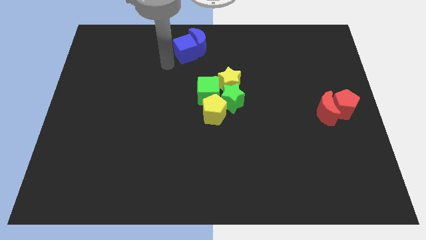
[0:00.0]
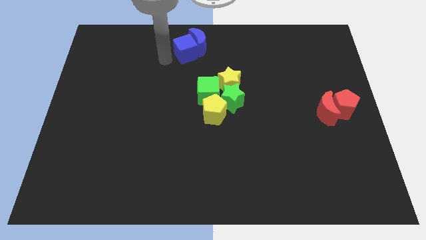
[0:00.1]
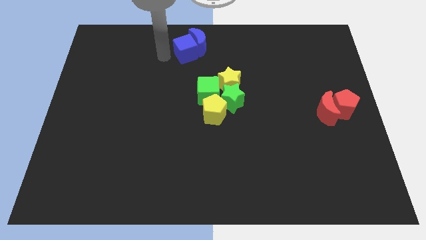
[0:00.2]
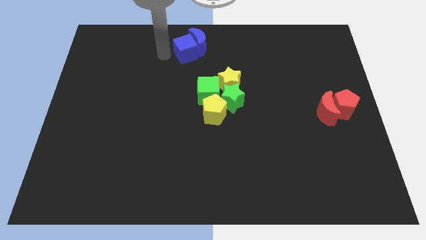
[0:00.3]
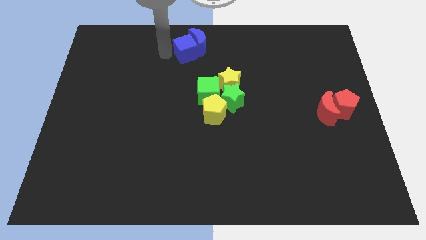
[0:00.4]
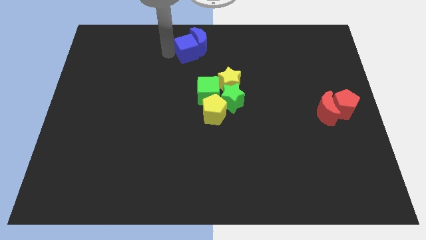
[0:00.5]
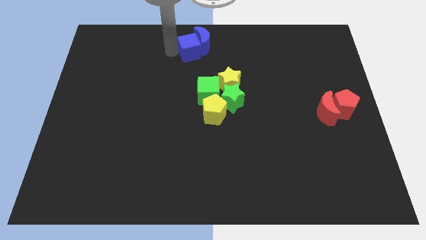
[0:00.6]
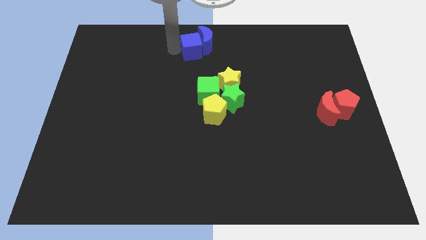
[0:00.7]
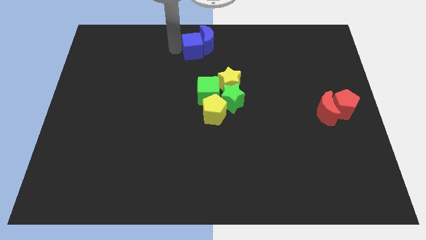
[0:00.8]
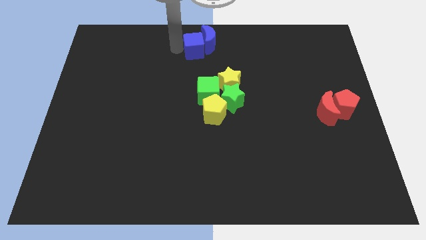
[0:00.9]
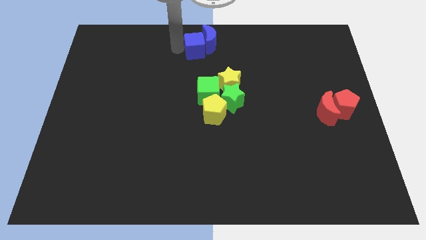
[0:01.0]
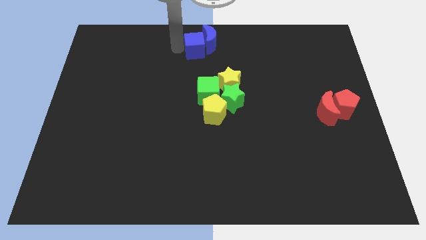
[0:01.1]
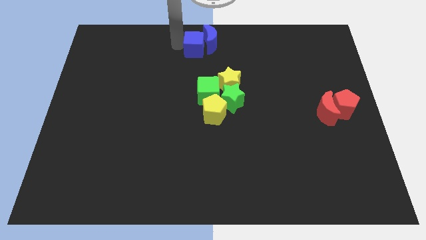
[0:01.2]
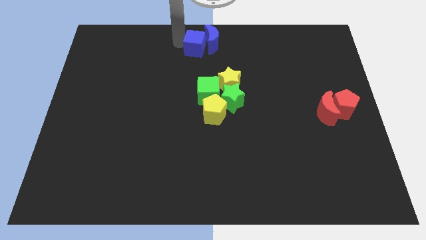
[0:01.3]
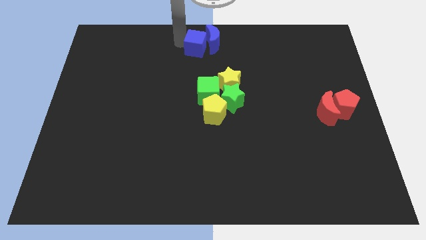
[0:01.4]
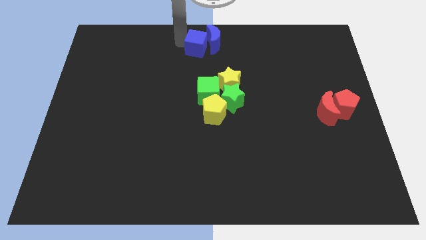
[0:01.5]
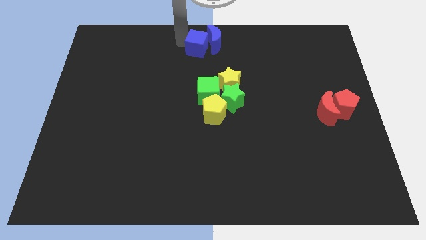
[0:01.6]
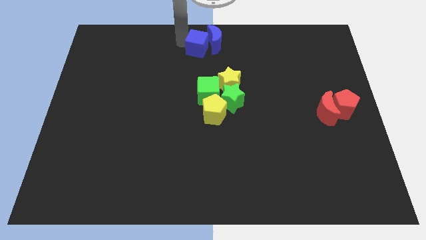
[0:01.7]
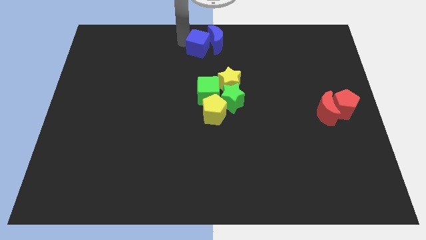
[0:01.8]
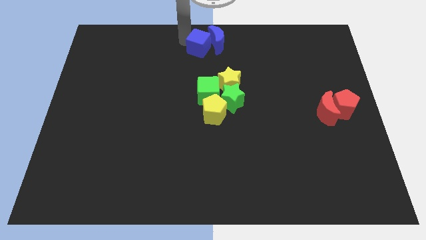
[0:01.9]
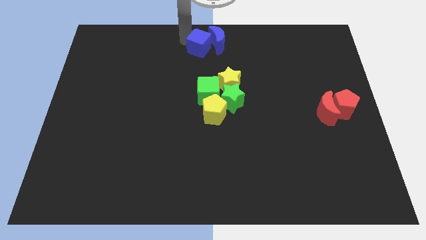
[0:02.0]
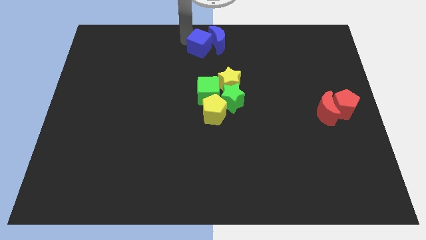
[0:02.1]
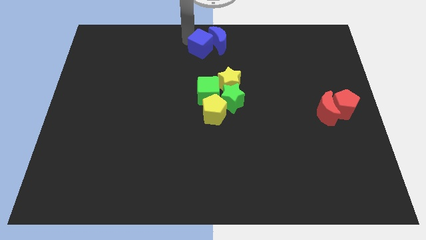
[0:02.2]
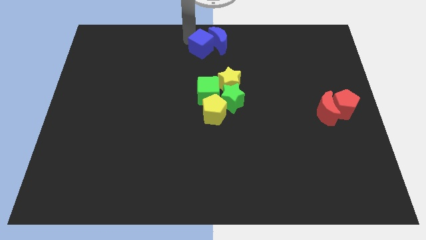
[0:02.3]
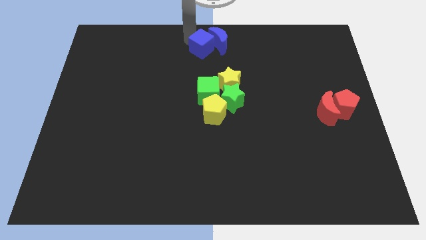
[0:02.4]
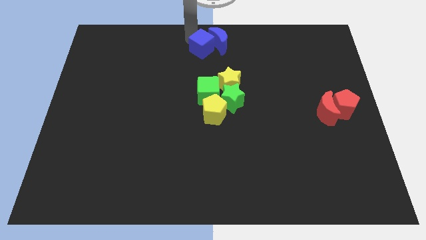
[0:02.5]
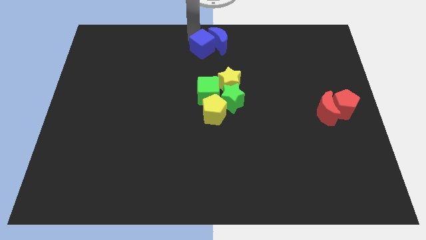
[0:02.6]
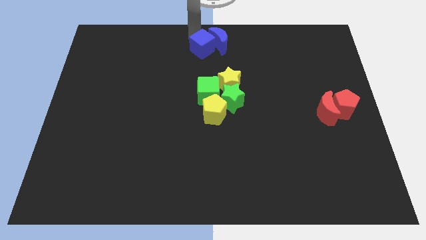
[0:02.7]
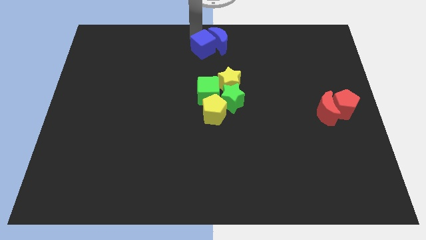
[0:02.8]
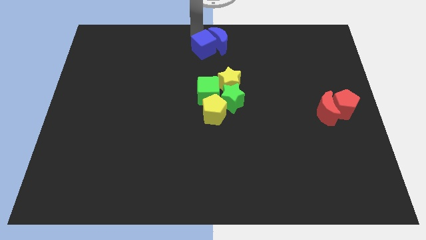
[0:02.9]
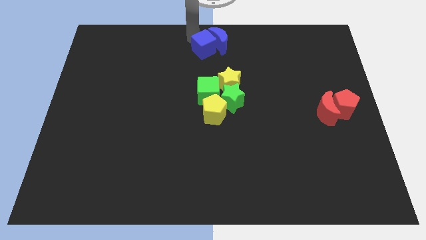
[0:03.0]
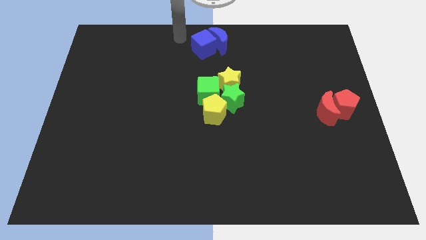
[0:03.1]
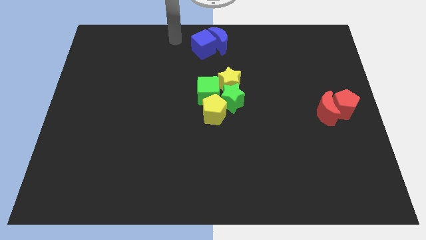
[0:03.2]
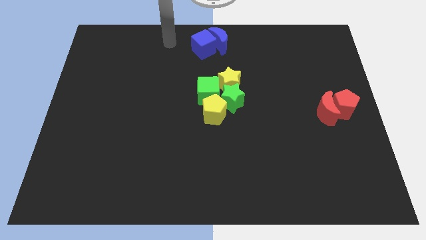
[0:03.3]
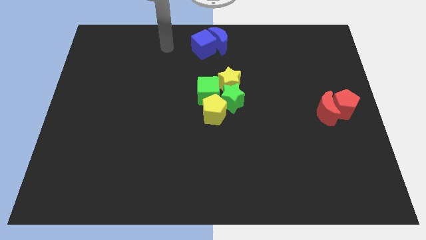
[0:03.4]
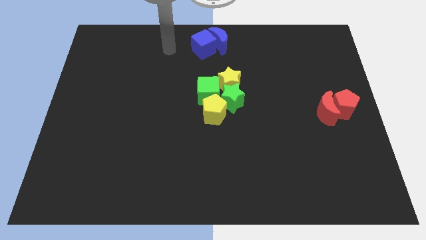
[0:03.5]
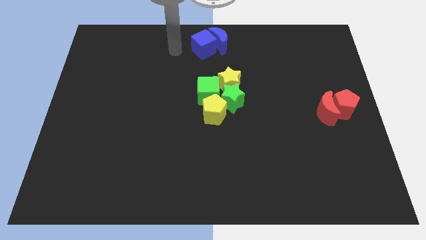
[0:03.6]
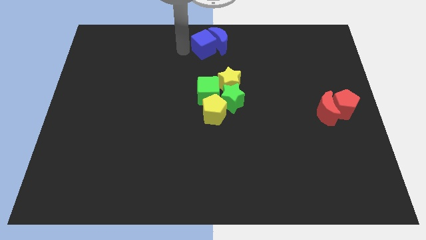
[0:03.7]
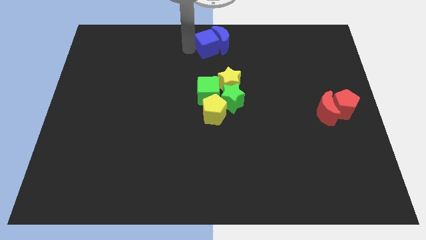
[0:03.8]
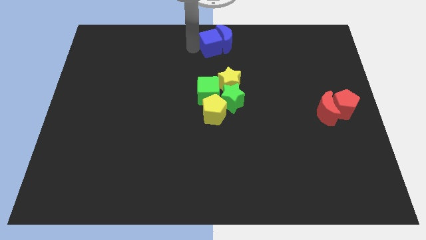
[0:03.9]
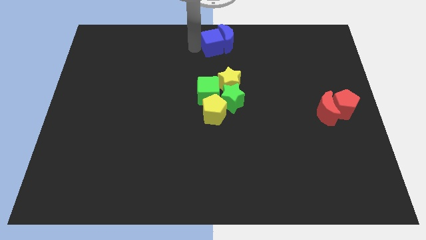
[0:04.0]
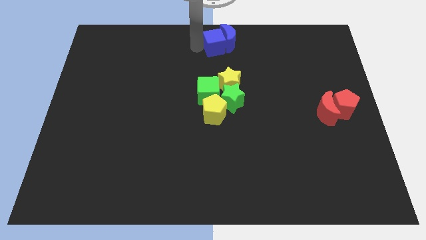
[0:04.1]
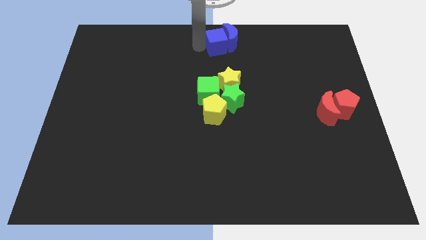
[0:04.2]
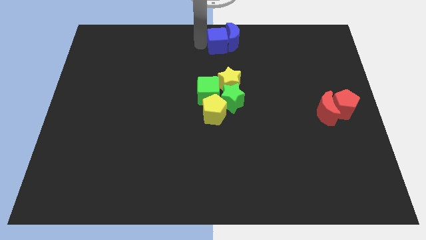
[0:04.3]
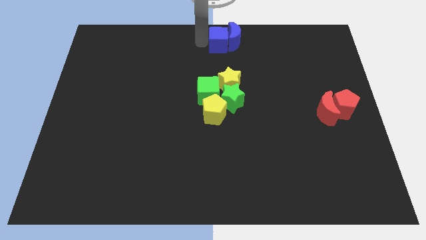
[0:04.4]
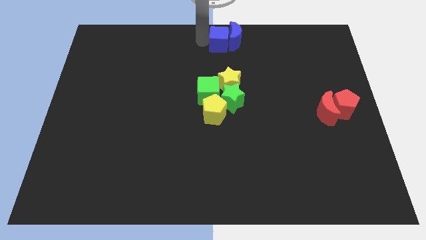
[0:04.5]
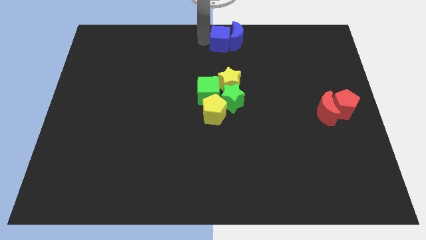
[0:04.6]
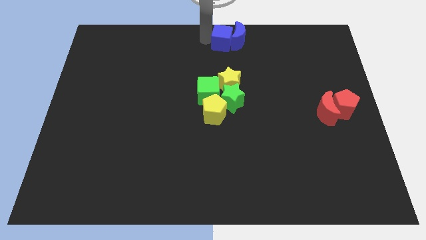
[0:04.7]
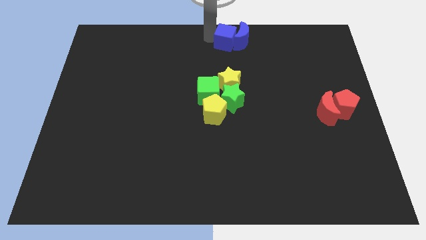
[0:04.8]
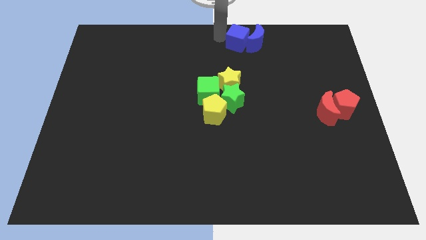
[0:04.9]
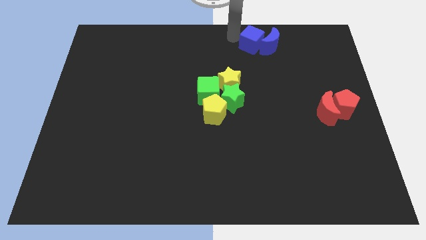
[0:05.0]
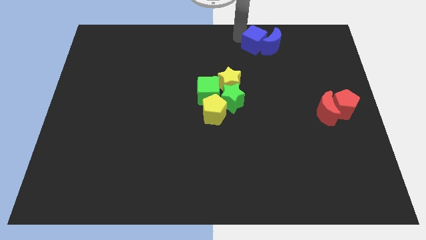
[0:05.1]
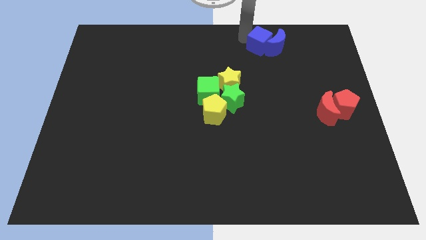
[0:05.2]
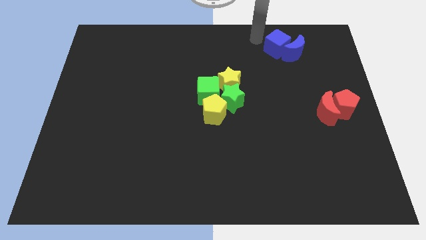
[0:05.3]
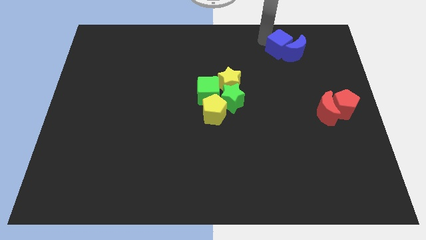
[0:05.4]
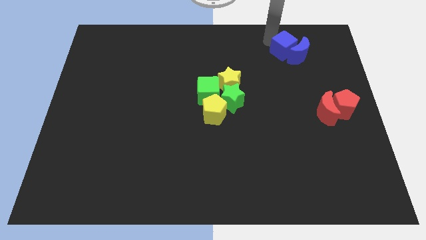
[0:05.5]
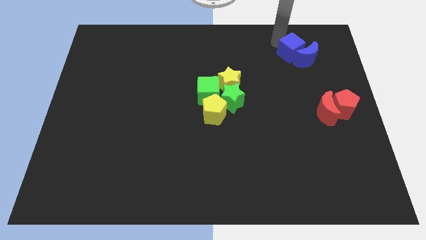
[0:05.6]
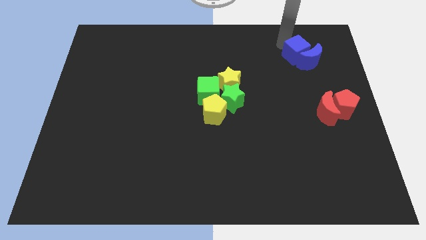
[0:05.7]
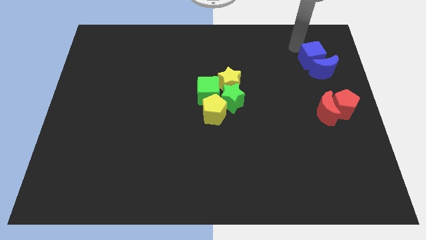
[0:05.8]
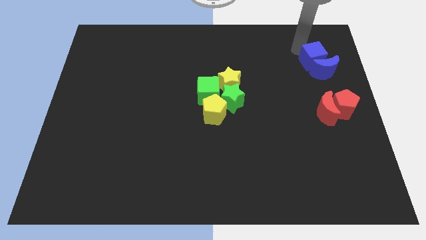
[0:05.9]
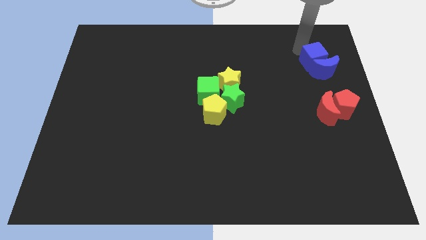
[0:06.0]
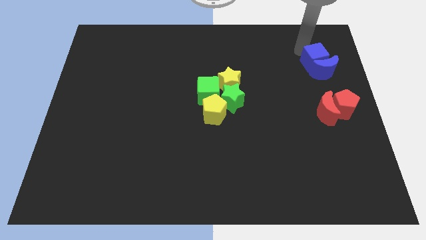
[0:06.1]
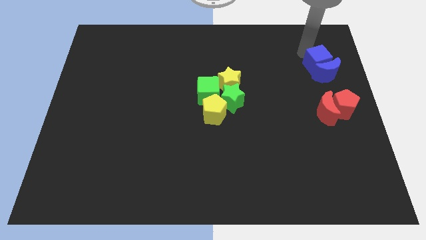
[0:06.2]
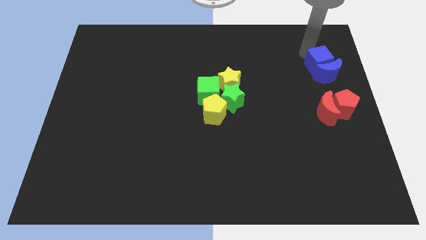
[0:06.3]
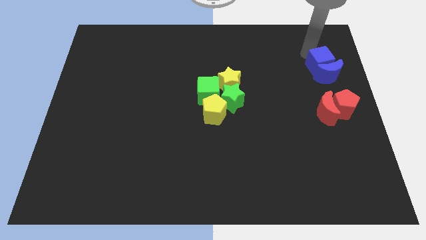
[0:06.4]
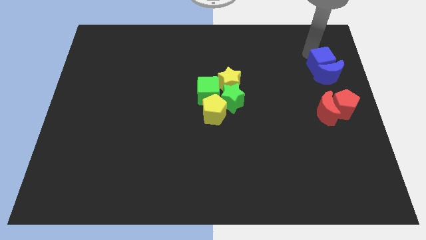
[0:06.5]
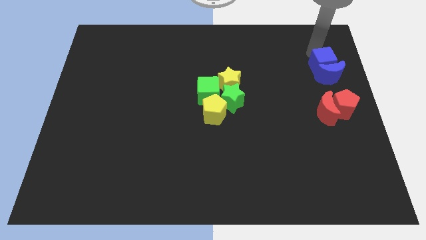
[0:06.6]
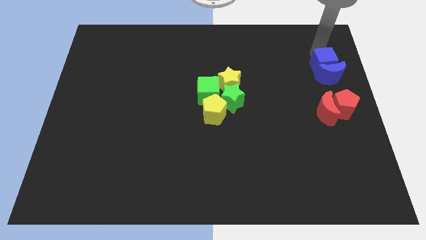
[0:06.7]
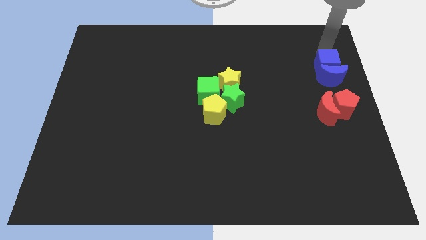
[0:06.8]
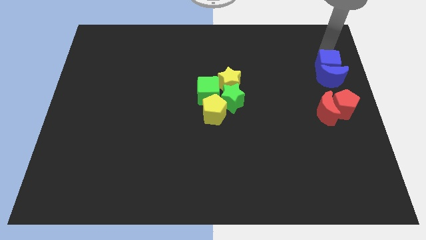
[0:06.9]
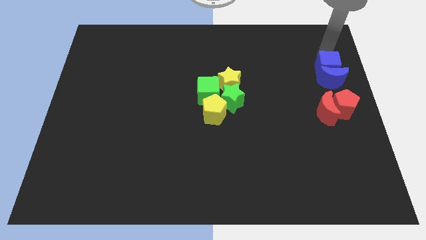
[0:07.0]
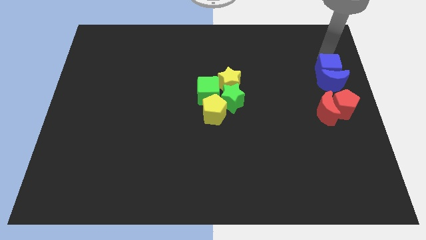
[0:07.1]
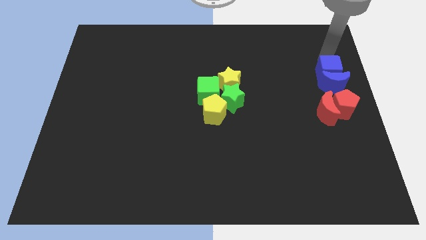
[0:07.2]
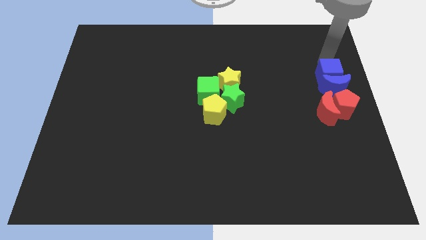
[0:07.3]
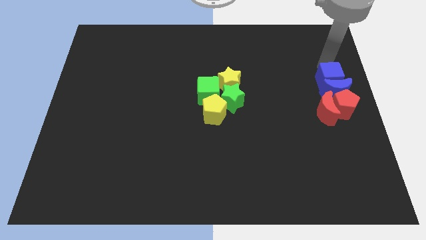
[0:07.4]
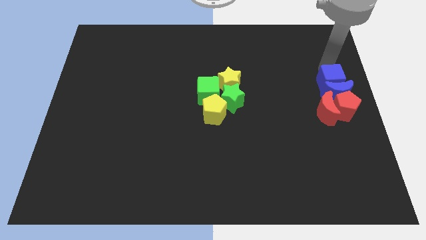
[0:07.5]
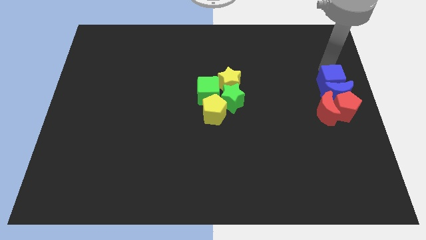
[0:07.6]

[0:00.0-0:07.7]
move blue cube and blue crescent together towards the red pentagon

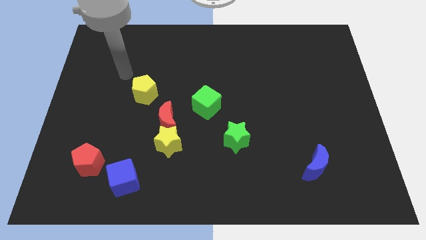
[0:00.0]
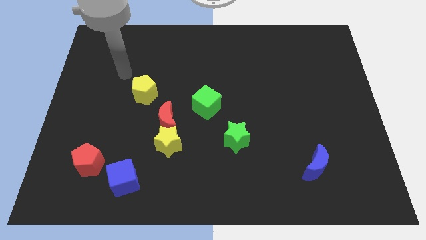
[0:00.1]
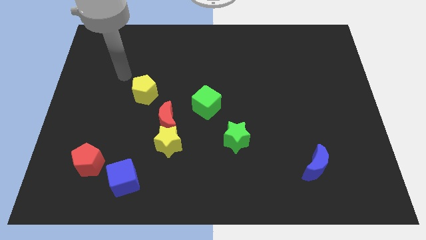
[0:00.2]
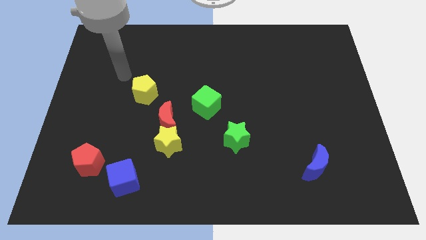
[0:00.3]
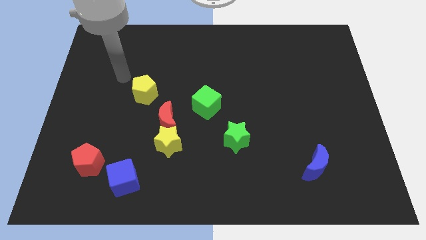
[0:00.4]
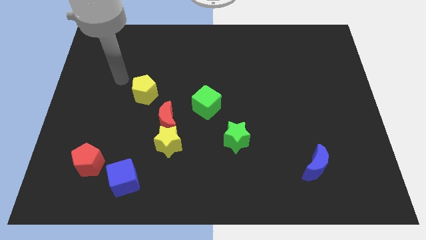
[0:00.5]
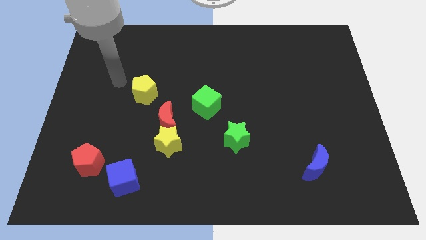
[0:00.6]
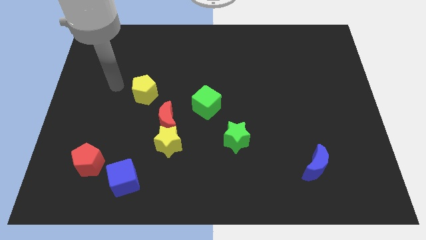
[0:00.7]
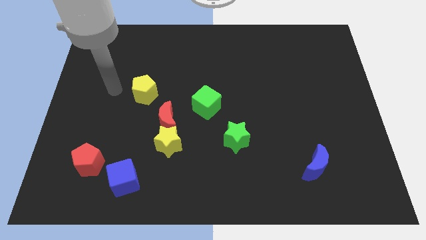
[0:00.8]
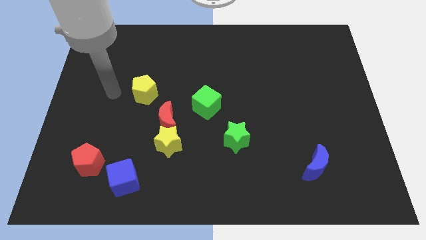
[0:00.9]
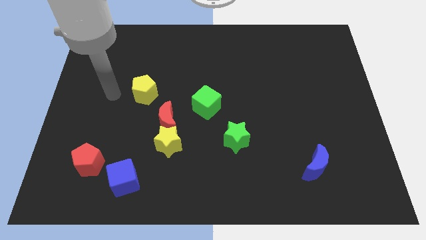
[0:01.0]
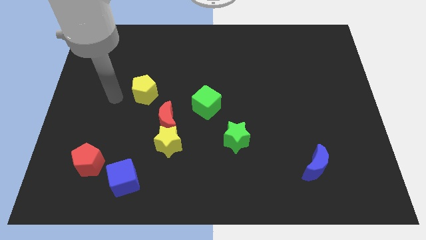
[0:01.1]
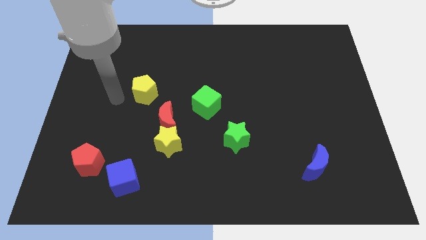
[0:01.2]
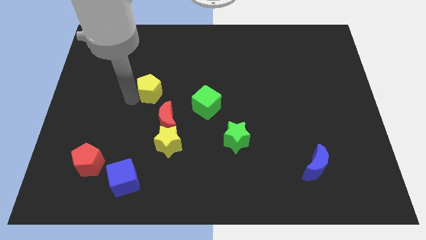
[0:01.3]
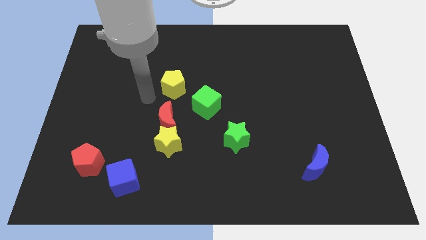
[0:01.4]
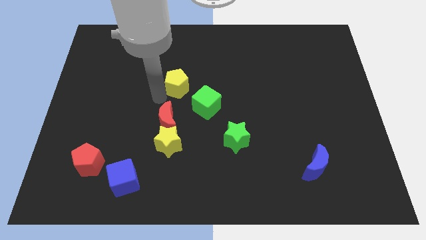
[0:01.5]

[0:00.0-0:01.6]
move yellow pentagon towards its right
